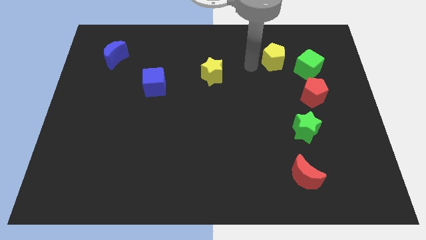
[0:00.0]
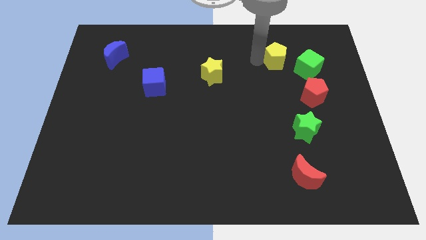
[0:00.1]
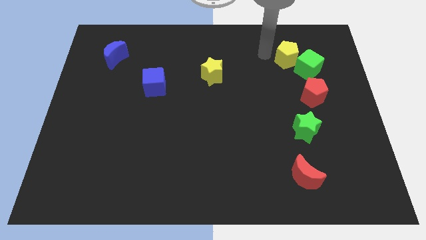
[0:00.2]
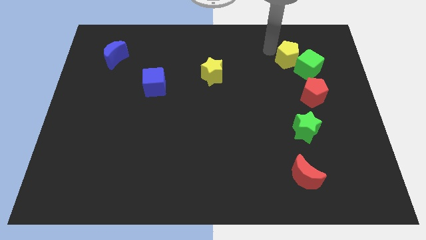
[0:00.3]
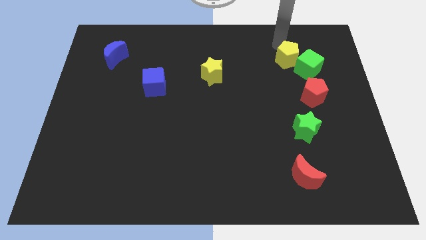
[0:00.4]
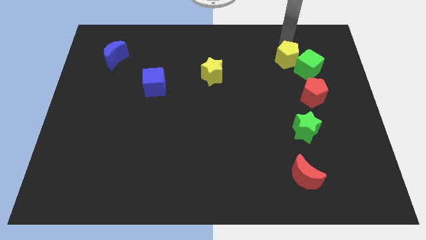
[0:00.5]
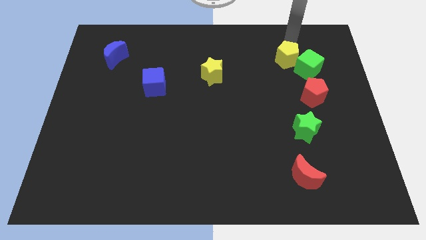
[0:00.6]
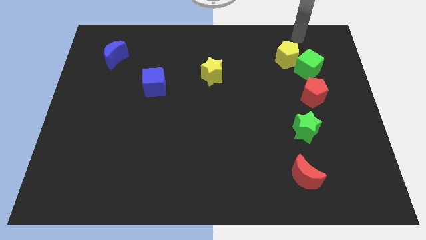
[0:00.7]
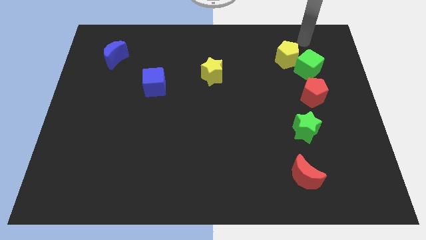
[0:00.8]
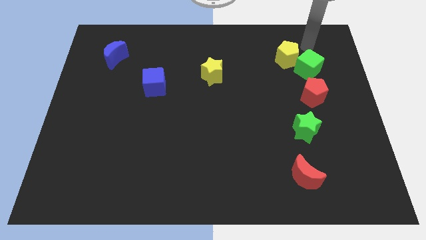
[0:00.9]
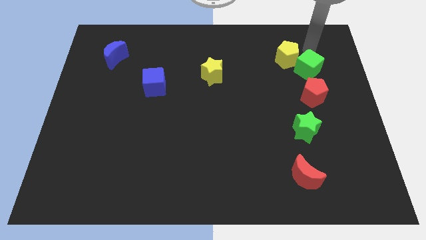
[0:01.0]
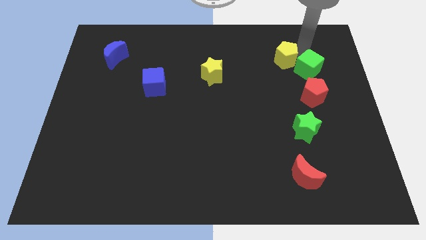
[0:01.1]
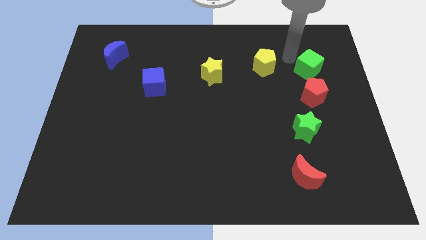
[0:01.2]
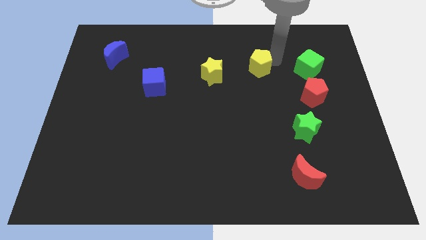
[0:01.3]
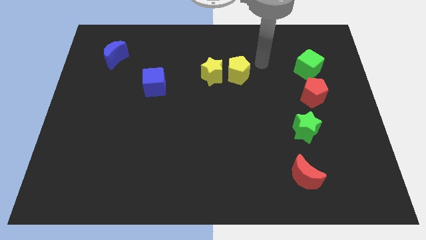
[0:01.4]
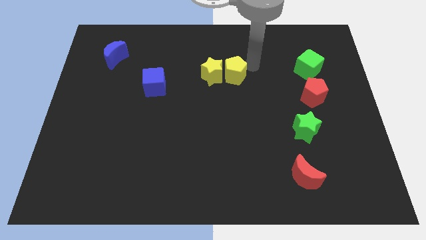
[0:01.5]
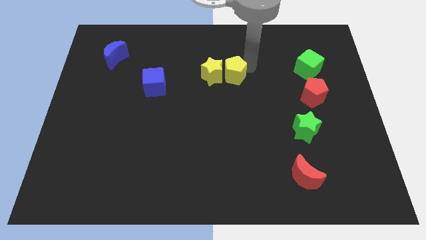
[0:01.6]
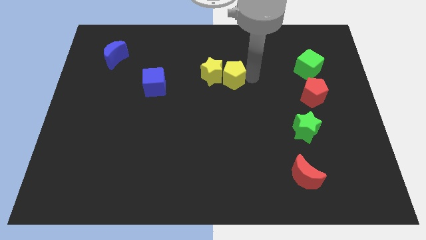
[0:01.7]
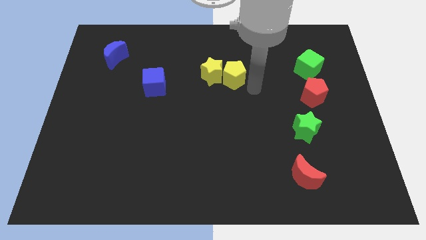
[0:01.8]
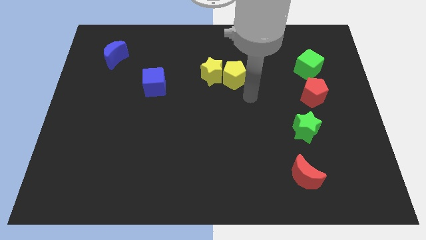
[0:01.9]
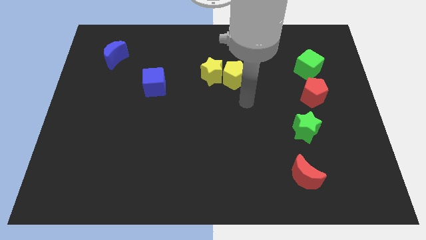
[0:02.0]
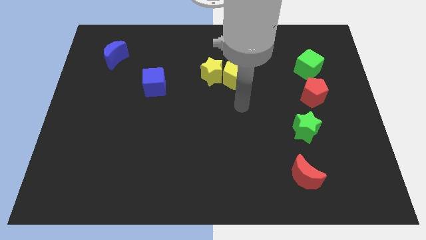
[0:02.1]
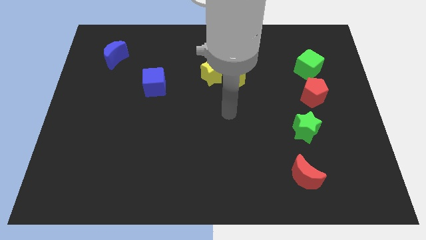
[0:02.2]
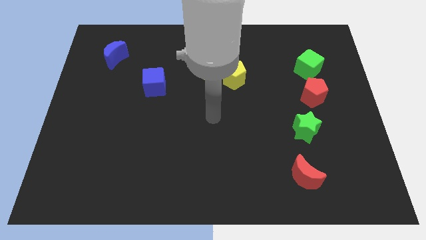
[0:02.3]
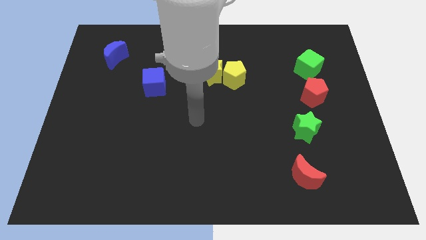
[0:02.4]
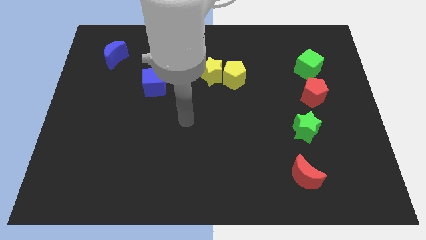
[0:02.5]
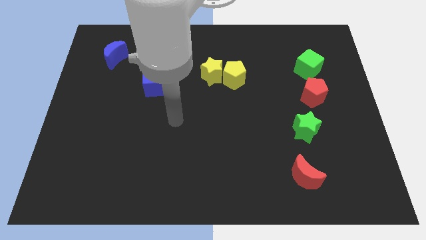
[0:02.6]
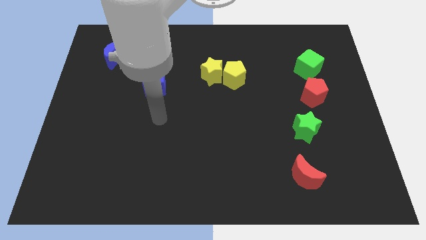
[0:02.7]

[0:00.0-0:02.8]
move yellow pentagon right beside the yellow star

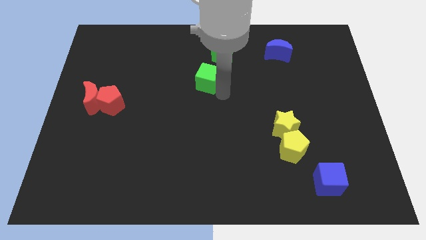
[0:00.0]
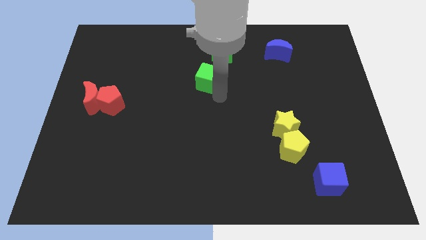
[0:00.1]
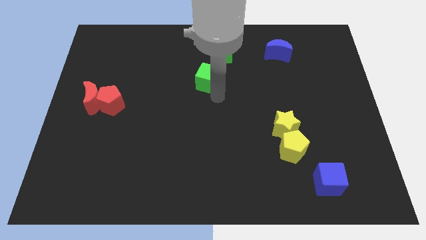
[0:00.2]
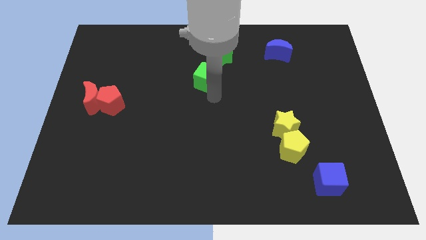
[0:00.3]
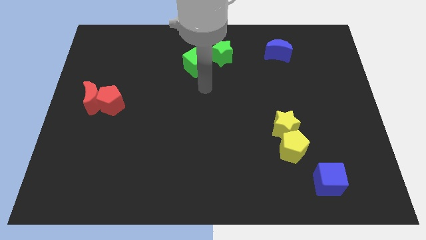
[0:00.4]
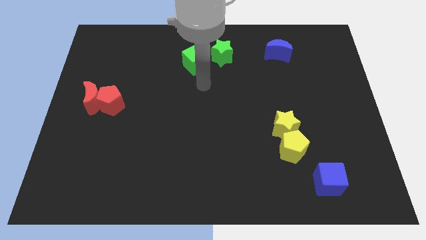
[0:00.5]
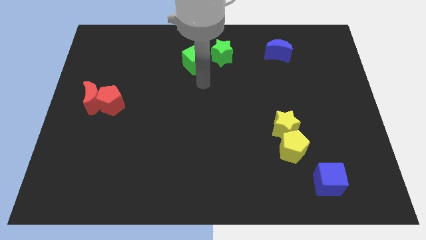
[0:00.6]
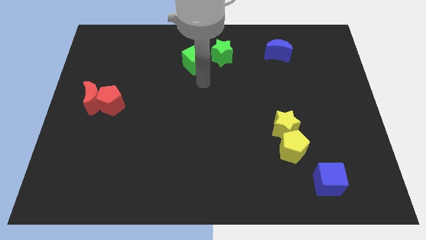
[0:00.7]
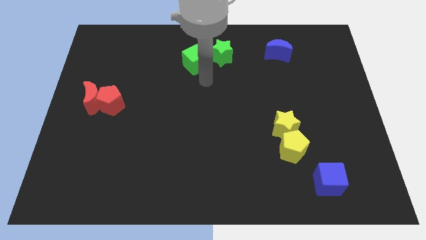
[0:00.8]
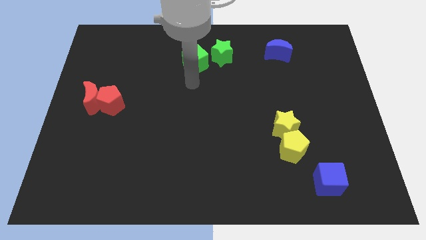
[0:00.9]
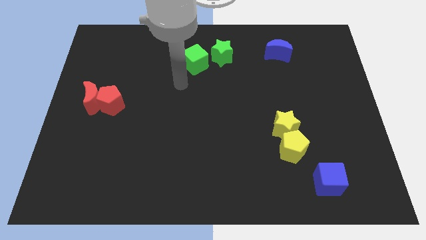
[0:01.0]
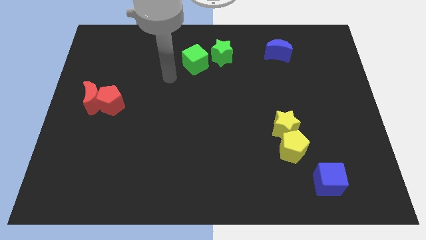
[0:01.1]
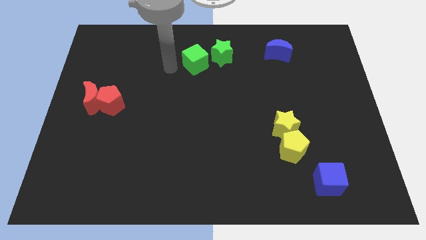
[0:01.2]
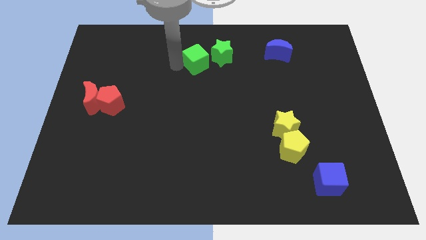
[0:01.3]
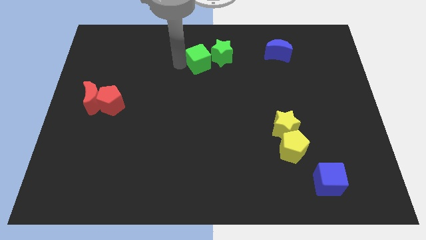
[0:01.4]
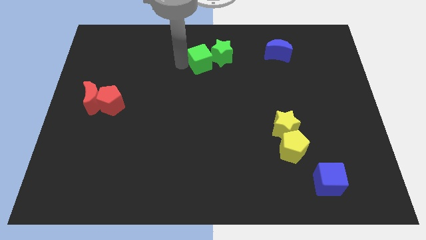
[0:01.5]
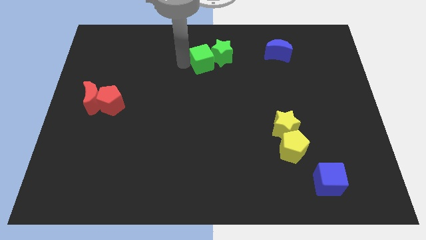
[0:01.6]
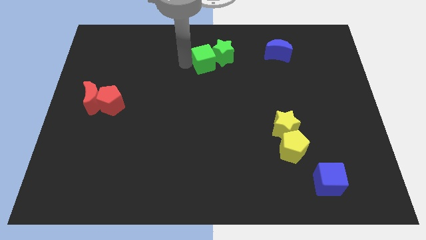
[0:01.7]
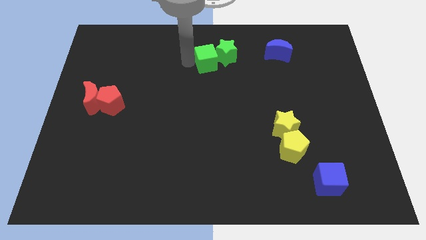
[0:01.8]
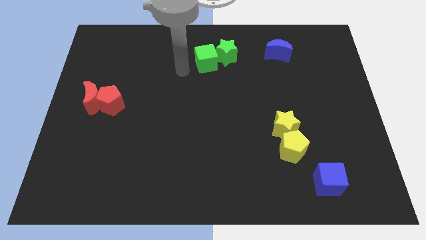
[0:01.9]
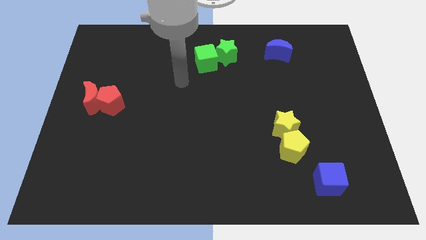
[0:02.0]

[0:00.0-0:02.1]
push the green cube into green star

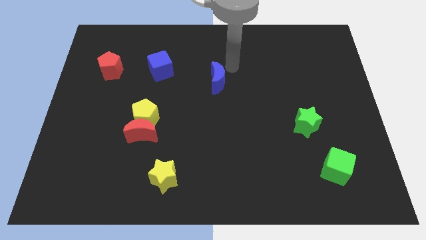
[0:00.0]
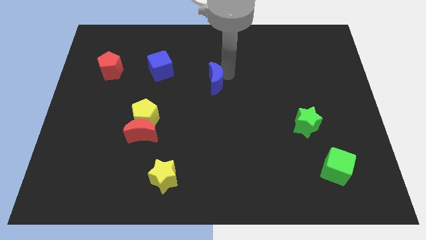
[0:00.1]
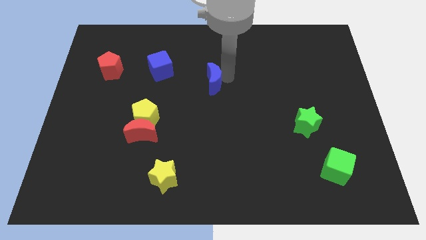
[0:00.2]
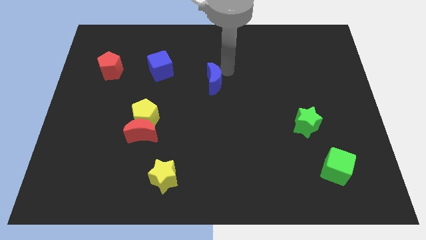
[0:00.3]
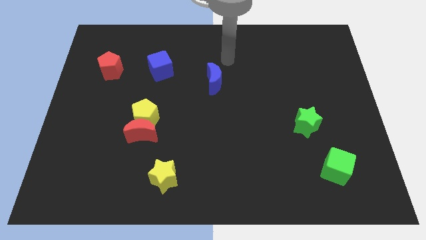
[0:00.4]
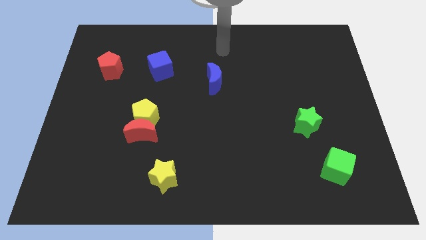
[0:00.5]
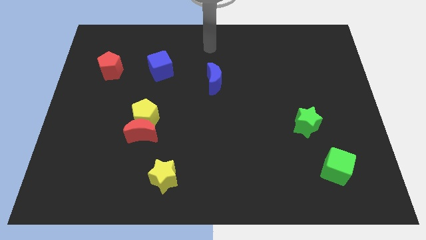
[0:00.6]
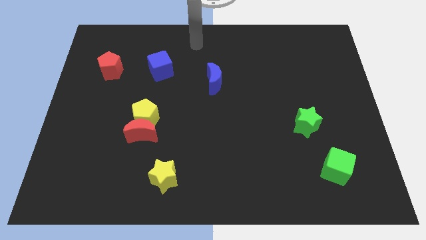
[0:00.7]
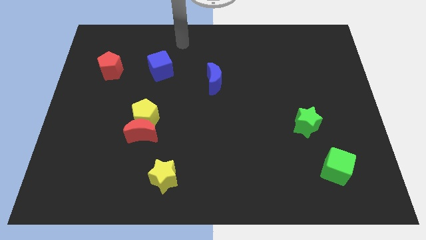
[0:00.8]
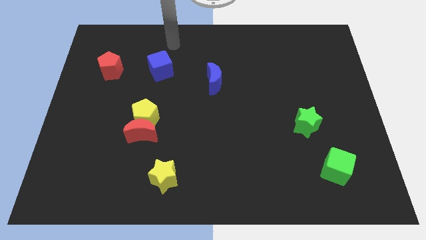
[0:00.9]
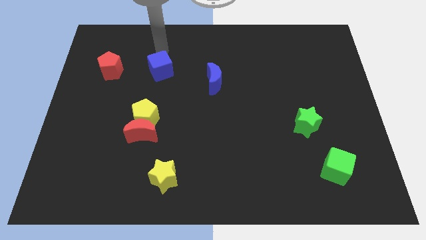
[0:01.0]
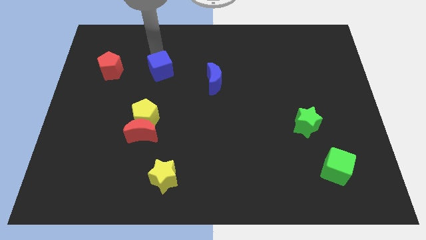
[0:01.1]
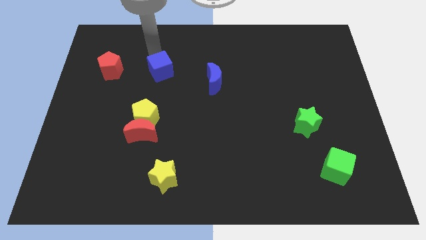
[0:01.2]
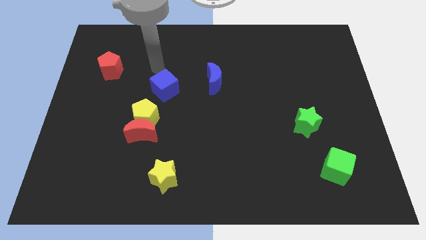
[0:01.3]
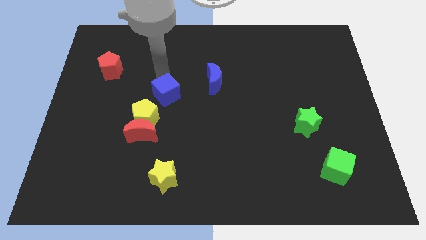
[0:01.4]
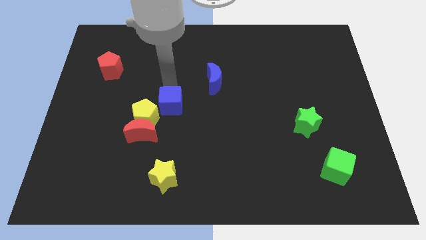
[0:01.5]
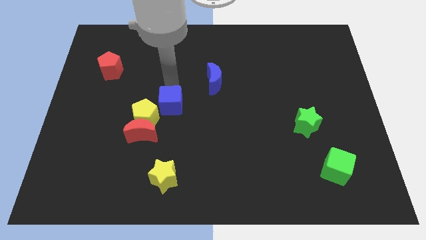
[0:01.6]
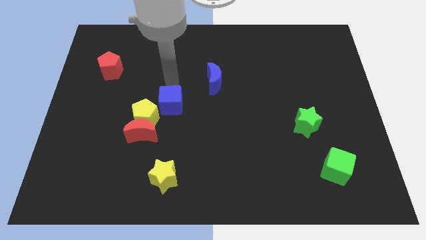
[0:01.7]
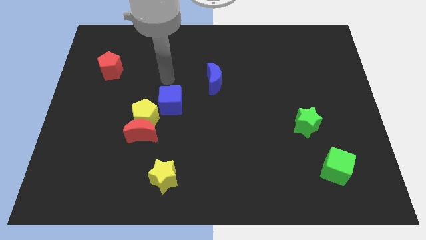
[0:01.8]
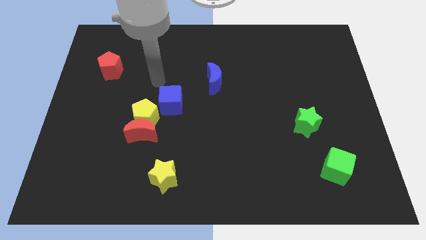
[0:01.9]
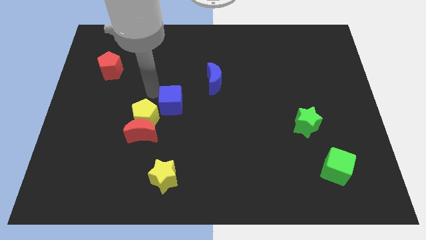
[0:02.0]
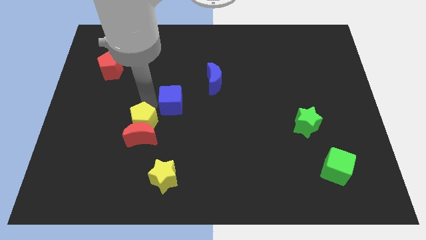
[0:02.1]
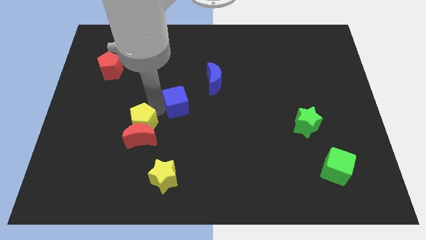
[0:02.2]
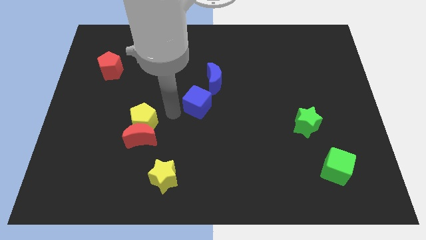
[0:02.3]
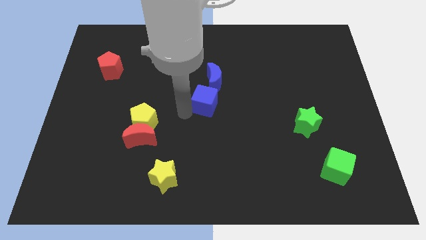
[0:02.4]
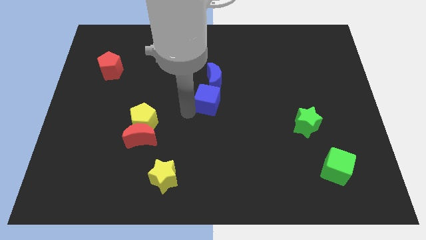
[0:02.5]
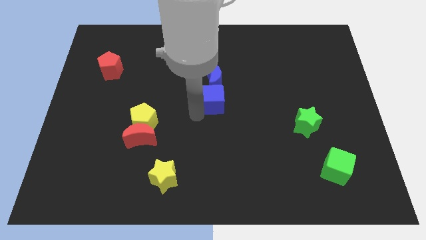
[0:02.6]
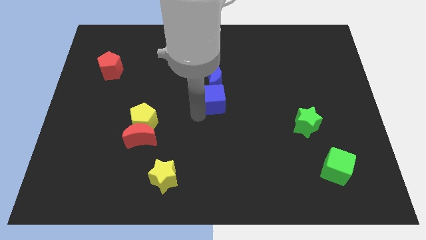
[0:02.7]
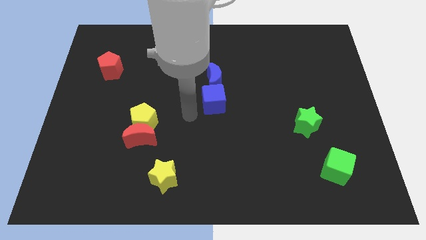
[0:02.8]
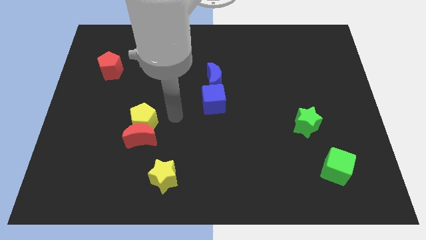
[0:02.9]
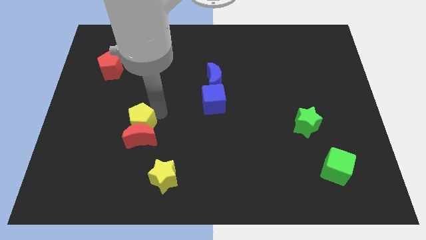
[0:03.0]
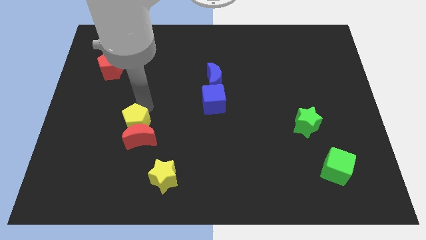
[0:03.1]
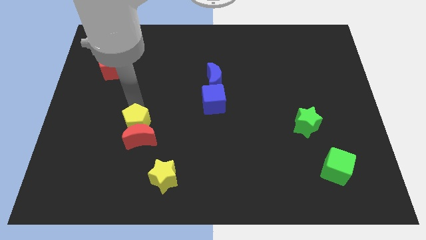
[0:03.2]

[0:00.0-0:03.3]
place the blue cube vertically below the blue crescent

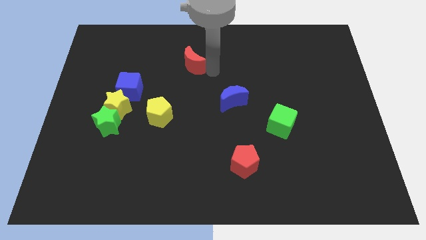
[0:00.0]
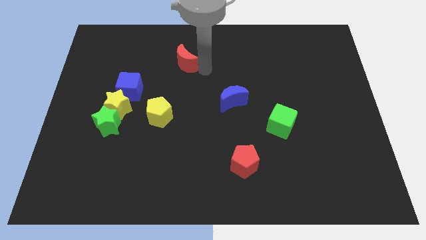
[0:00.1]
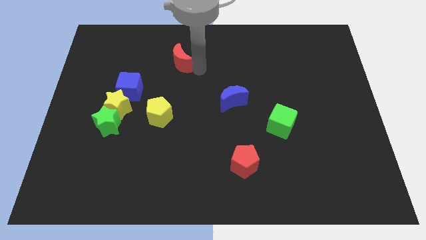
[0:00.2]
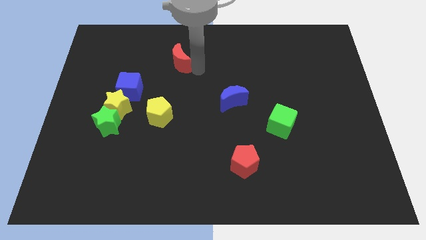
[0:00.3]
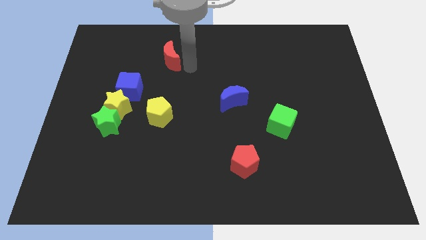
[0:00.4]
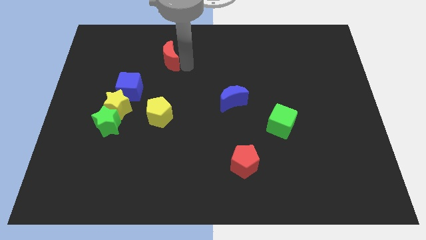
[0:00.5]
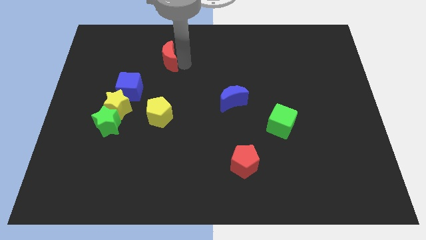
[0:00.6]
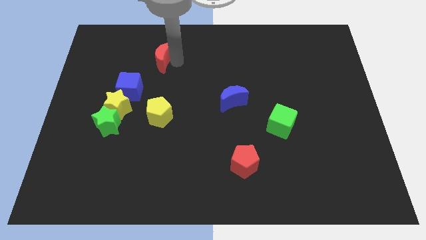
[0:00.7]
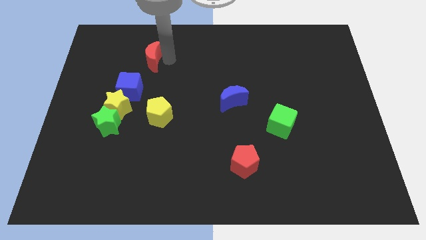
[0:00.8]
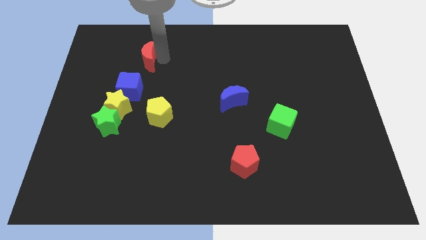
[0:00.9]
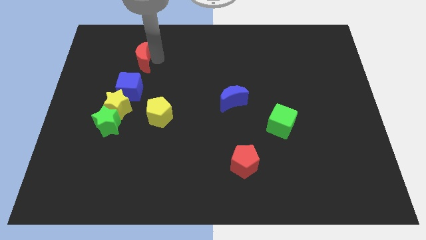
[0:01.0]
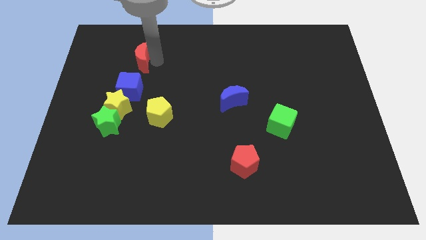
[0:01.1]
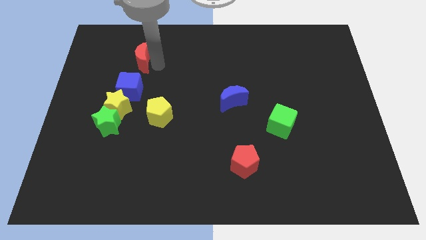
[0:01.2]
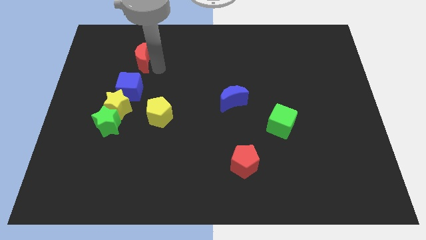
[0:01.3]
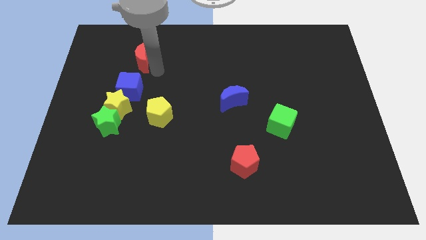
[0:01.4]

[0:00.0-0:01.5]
move the red crescent to the top of the blue cube
